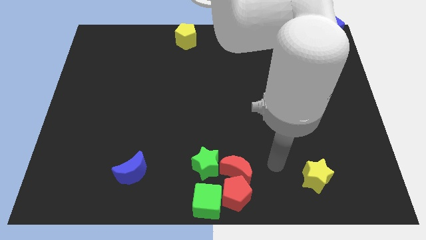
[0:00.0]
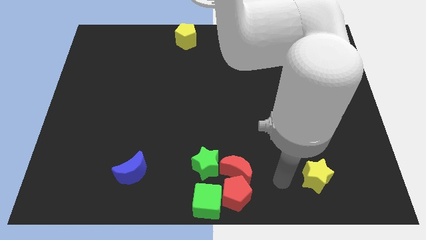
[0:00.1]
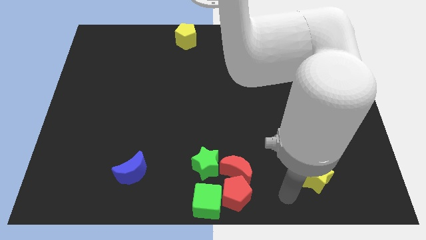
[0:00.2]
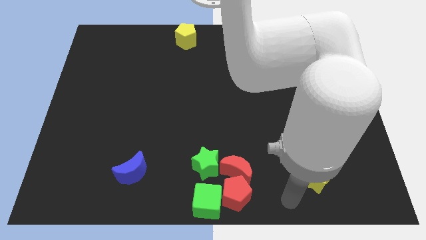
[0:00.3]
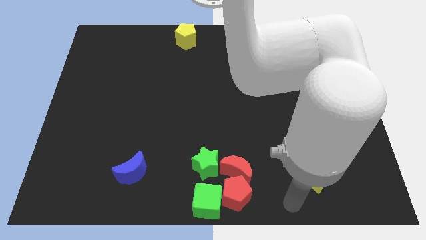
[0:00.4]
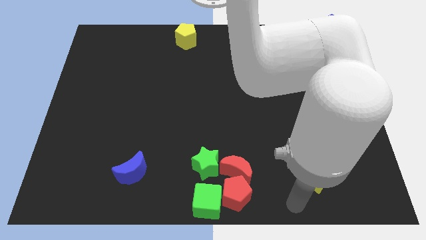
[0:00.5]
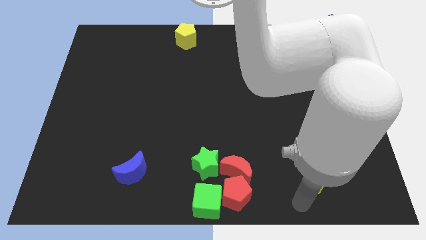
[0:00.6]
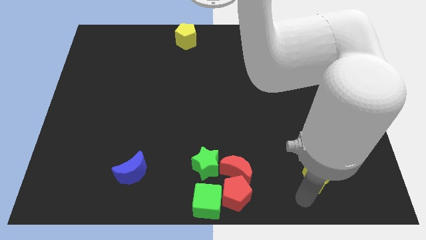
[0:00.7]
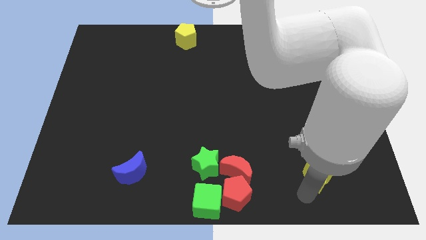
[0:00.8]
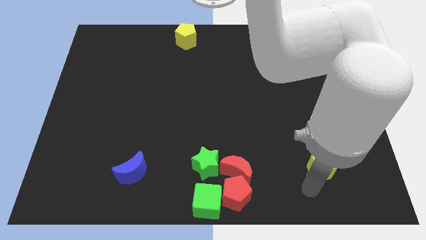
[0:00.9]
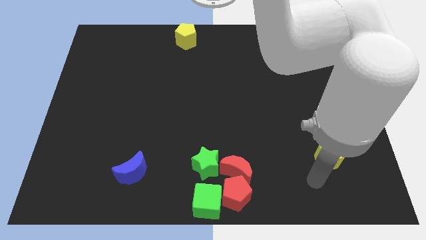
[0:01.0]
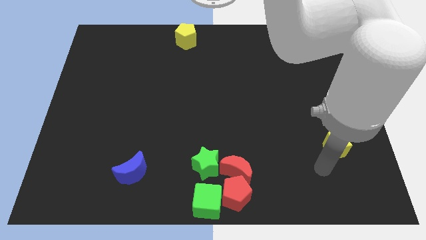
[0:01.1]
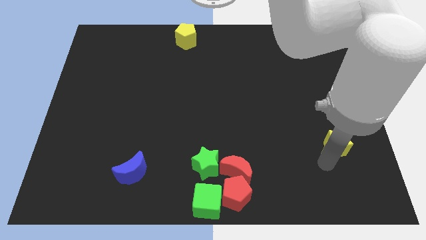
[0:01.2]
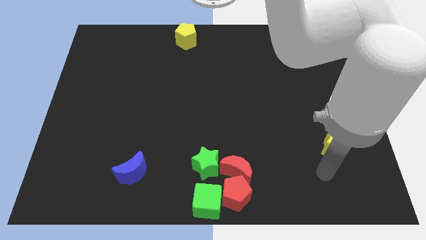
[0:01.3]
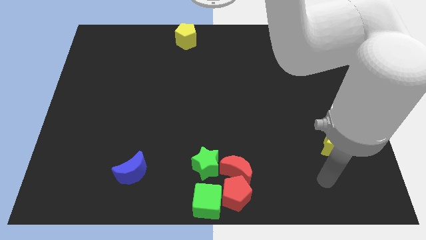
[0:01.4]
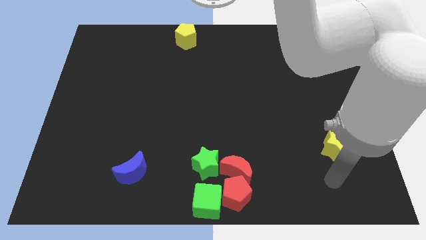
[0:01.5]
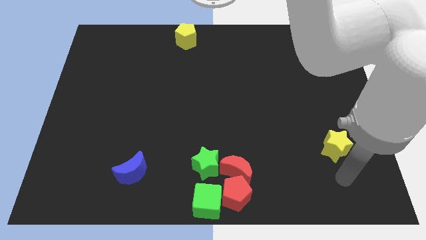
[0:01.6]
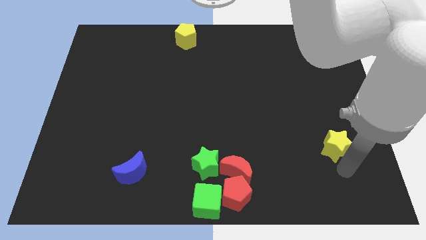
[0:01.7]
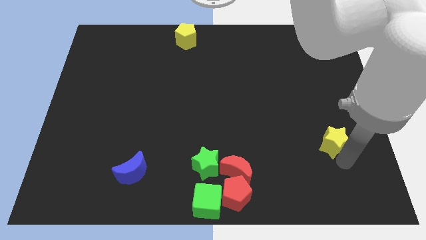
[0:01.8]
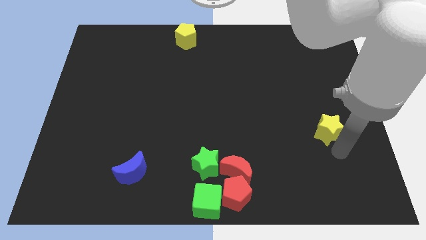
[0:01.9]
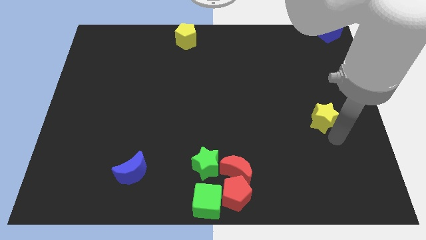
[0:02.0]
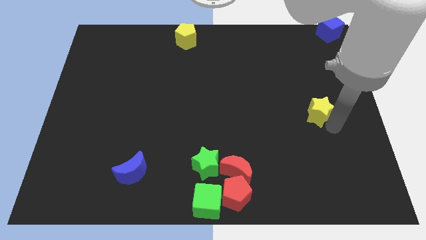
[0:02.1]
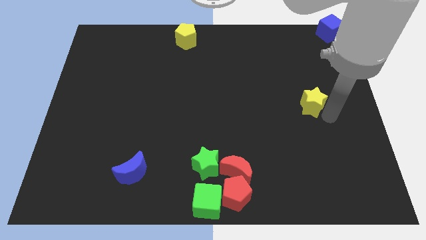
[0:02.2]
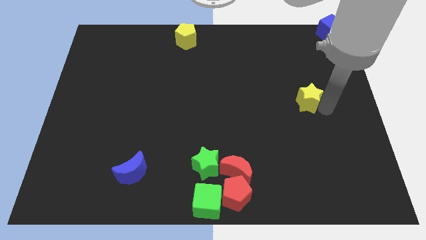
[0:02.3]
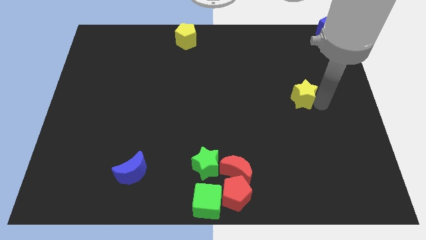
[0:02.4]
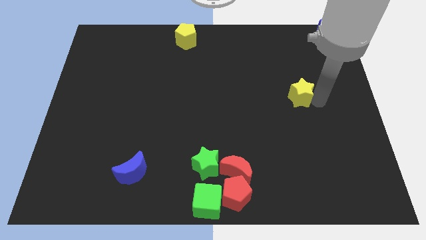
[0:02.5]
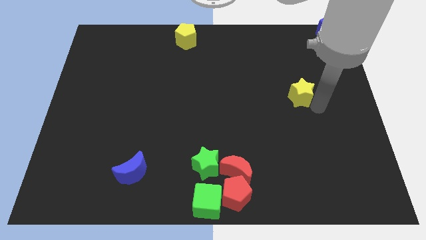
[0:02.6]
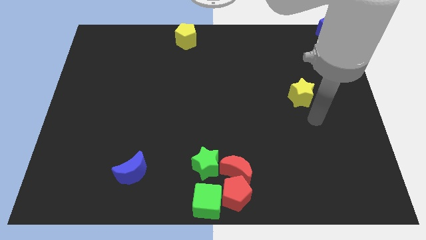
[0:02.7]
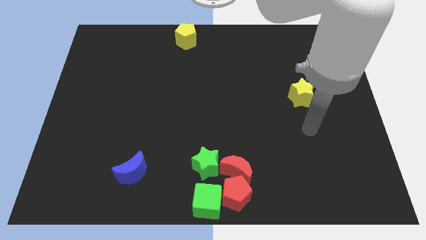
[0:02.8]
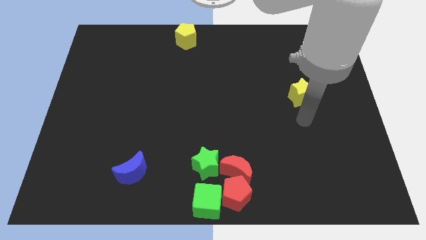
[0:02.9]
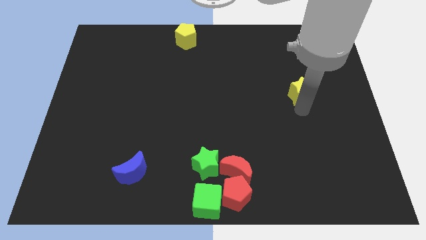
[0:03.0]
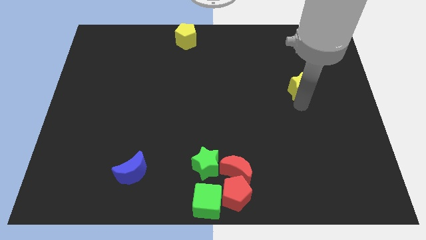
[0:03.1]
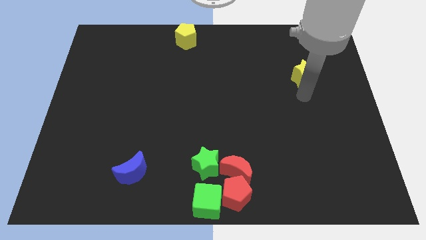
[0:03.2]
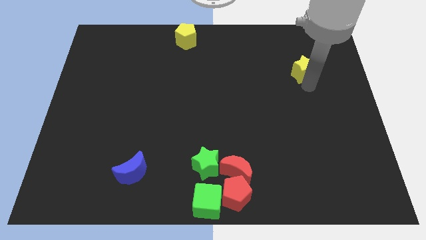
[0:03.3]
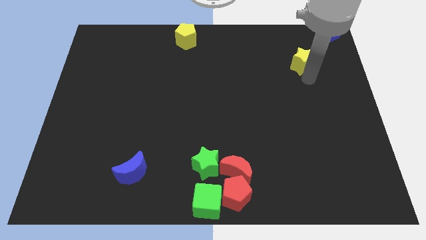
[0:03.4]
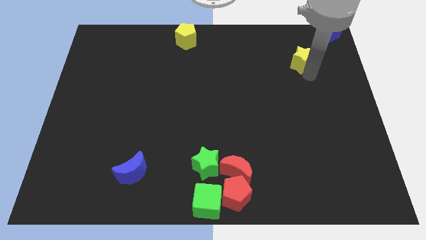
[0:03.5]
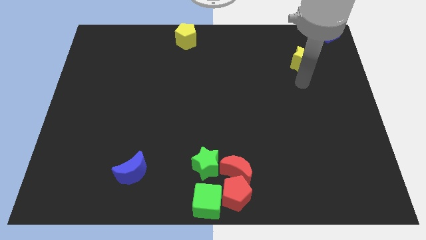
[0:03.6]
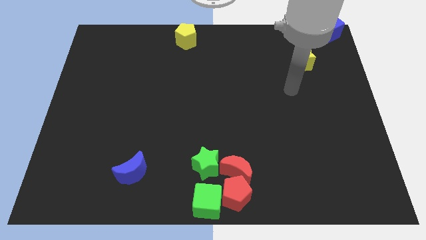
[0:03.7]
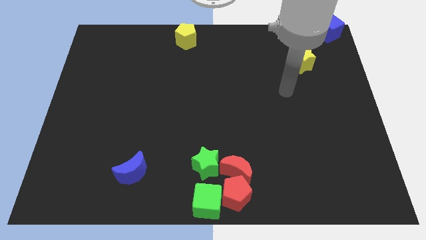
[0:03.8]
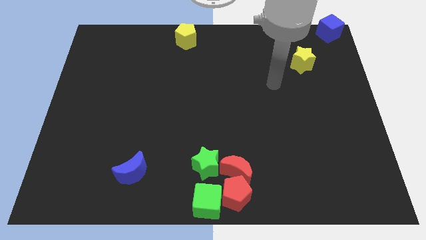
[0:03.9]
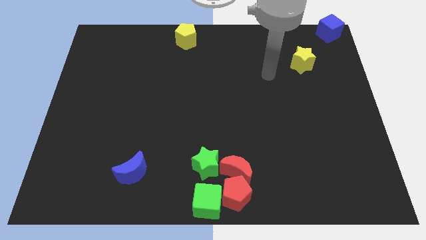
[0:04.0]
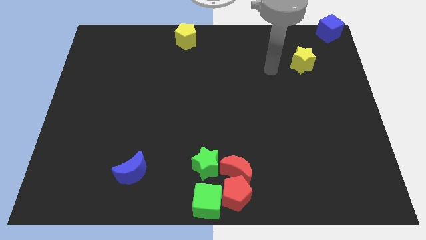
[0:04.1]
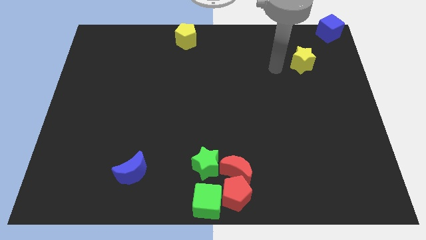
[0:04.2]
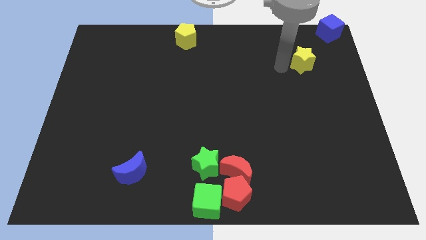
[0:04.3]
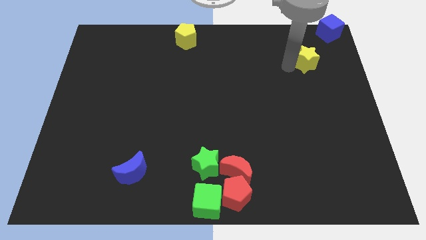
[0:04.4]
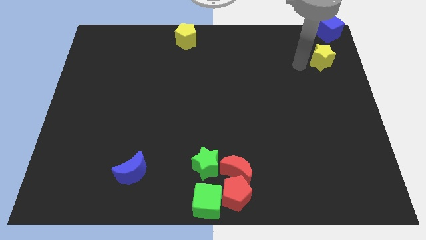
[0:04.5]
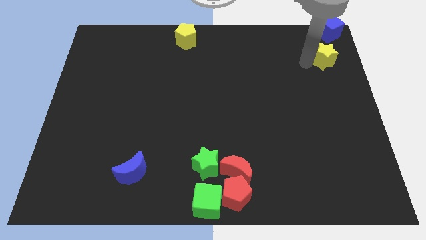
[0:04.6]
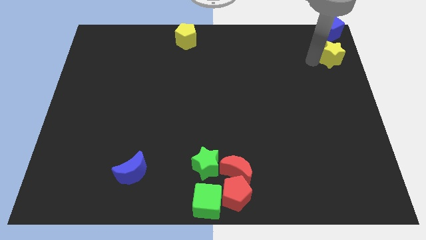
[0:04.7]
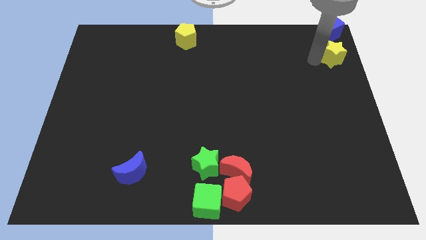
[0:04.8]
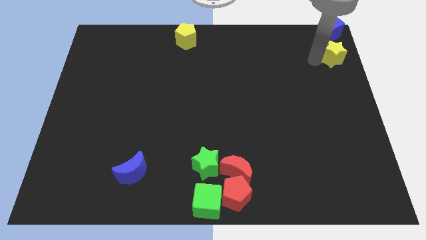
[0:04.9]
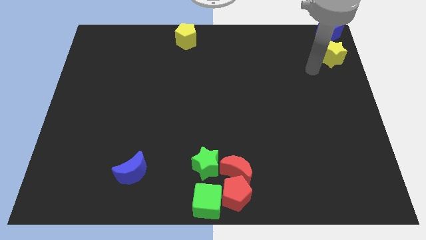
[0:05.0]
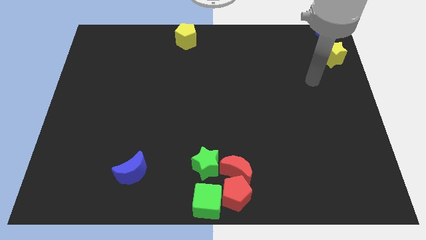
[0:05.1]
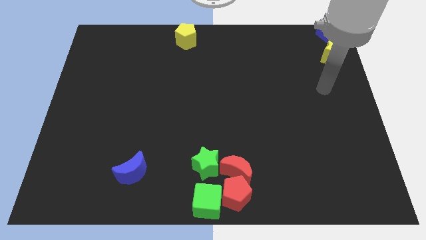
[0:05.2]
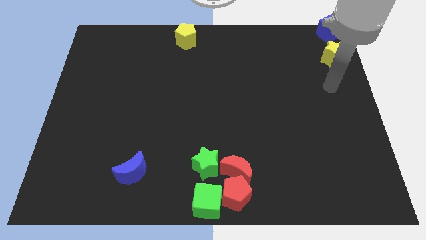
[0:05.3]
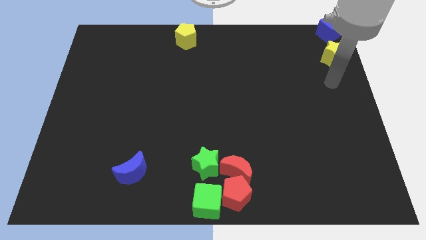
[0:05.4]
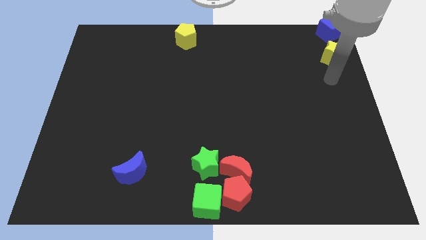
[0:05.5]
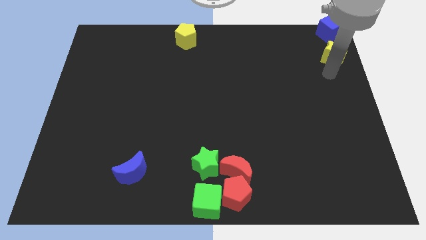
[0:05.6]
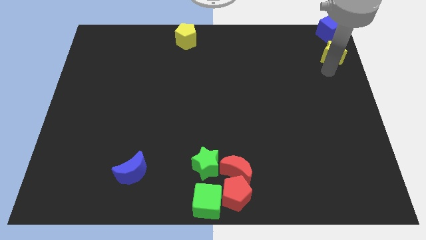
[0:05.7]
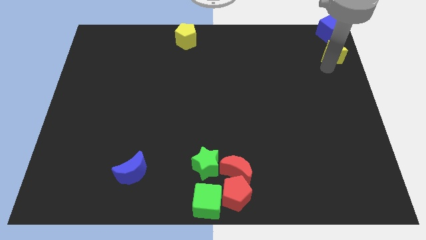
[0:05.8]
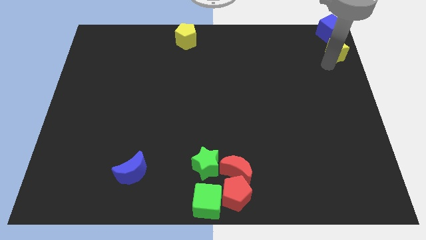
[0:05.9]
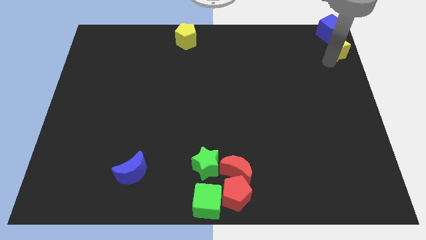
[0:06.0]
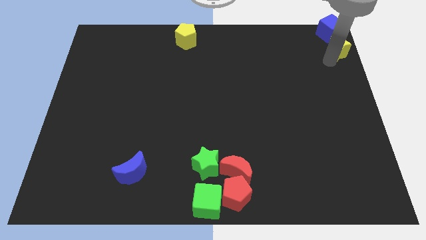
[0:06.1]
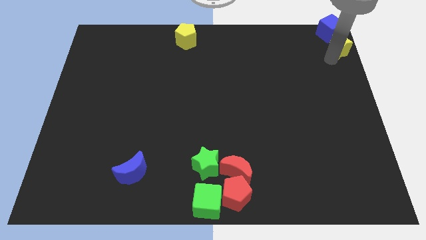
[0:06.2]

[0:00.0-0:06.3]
push the yellow star into the blue cube

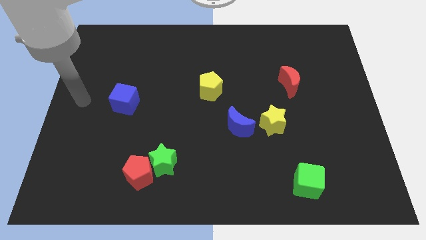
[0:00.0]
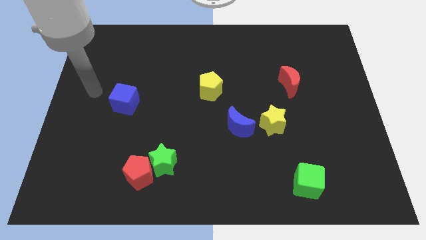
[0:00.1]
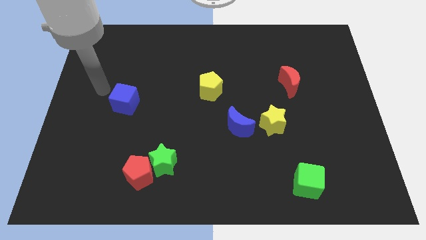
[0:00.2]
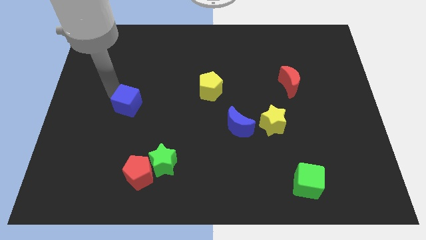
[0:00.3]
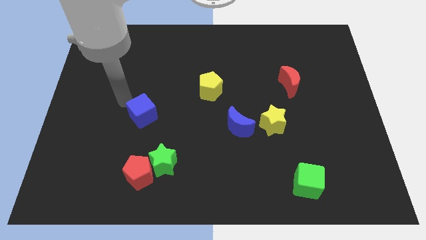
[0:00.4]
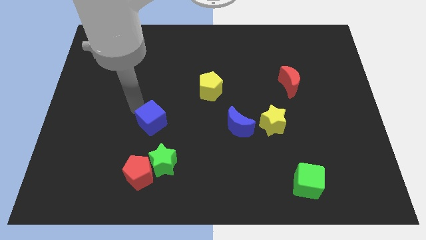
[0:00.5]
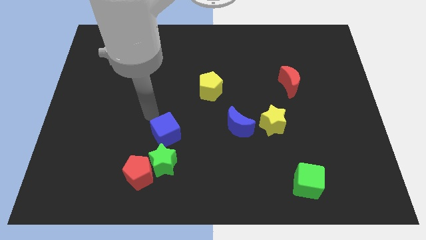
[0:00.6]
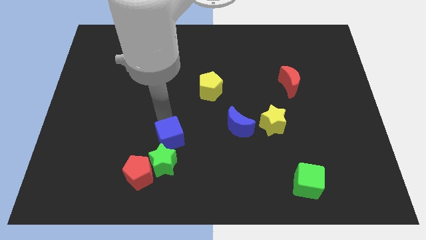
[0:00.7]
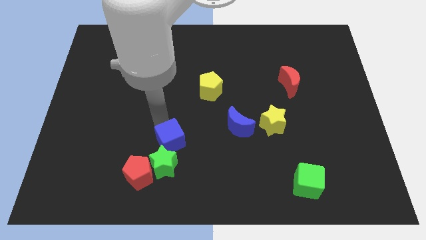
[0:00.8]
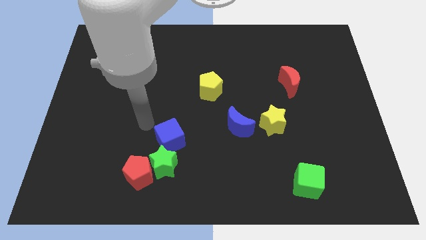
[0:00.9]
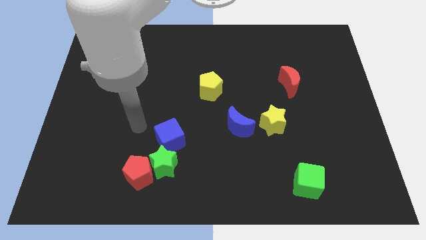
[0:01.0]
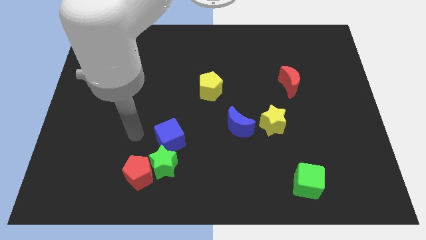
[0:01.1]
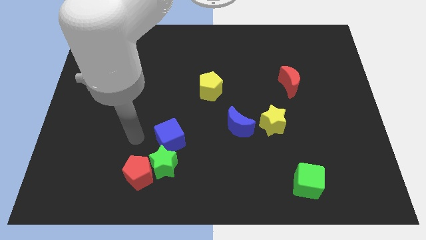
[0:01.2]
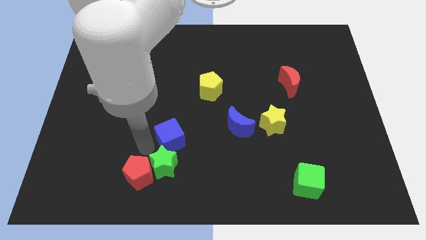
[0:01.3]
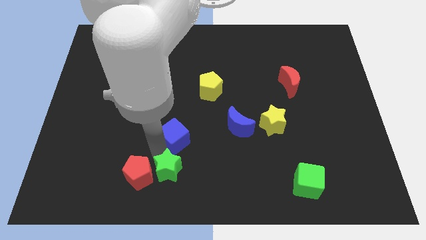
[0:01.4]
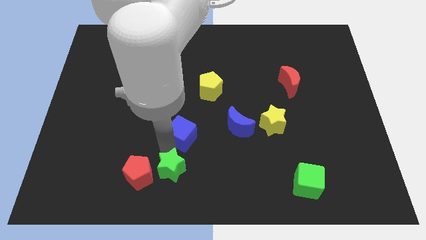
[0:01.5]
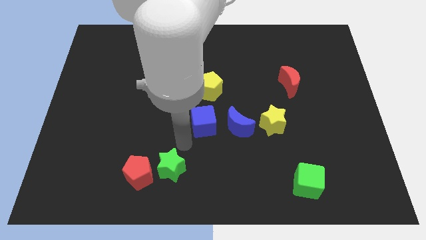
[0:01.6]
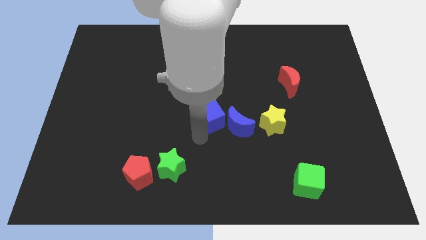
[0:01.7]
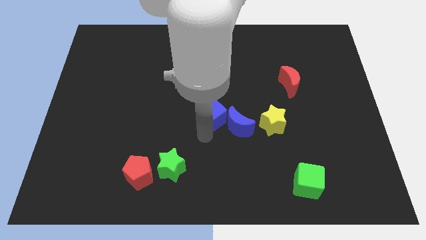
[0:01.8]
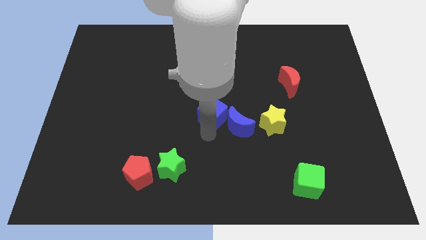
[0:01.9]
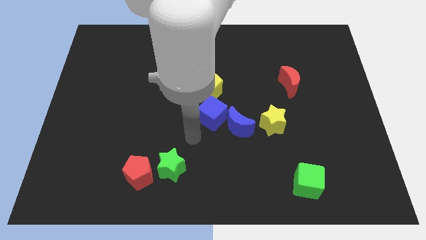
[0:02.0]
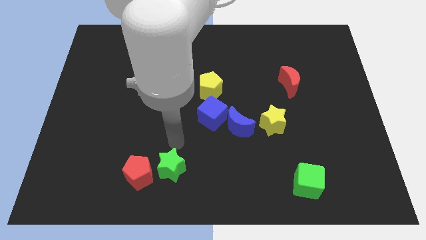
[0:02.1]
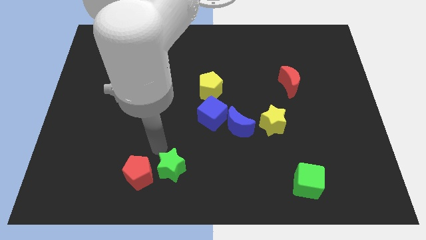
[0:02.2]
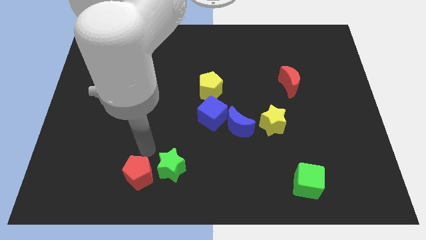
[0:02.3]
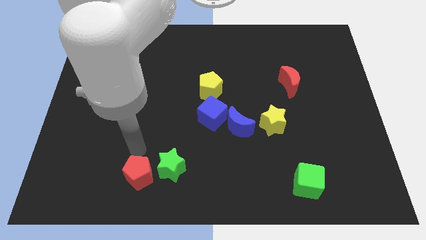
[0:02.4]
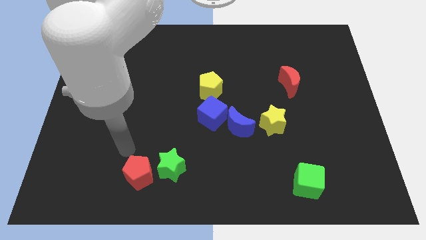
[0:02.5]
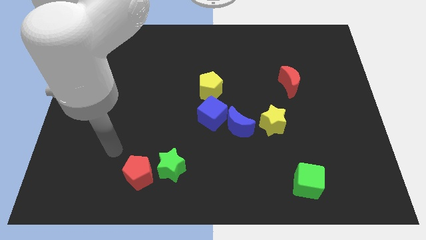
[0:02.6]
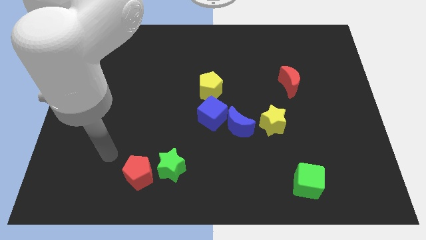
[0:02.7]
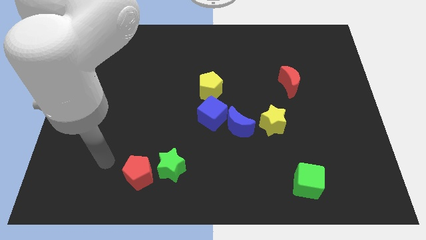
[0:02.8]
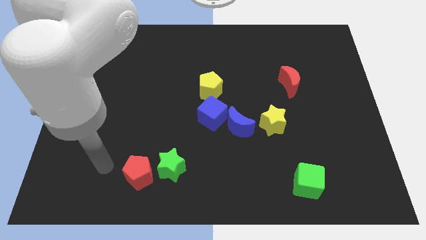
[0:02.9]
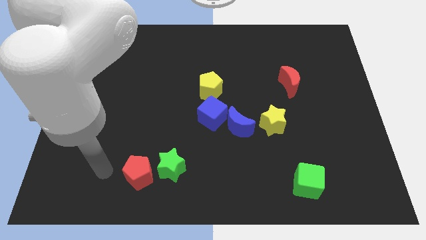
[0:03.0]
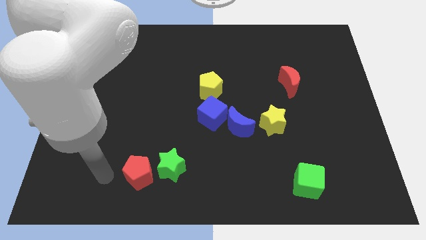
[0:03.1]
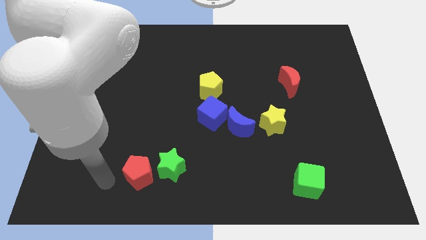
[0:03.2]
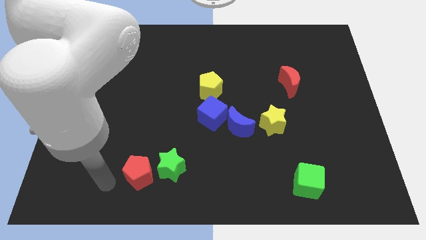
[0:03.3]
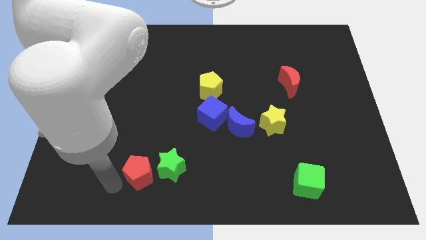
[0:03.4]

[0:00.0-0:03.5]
place your arm towards the left side of red pentagon
